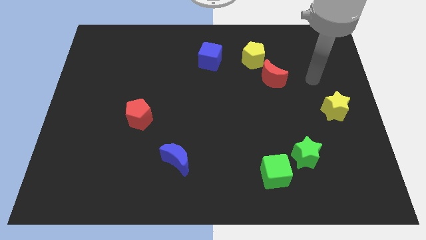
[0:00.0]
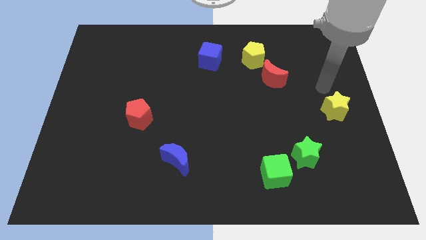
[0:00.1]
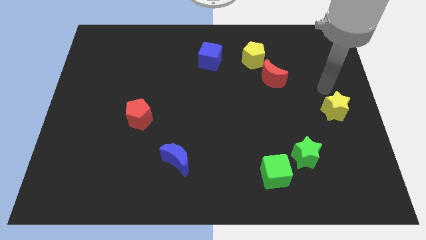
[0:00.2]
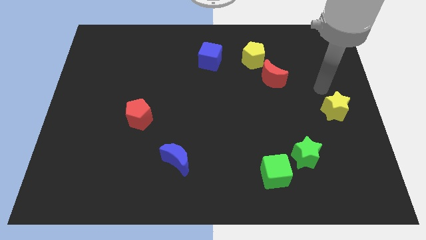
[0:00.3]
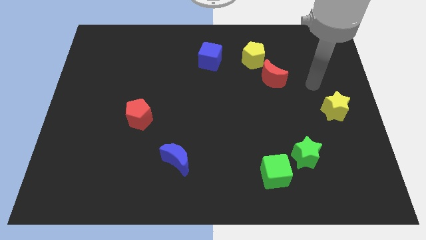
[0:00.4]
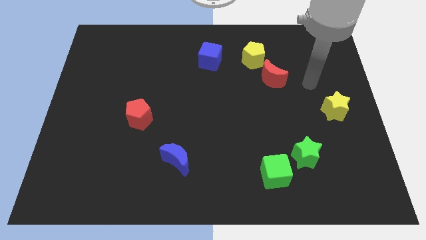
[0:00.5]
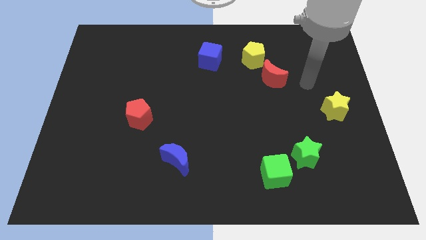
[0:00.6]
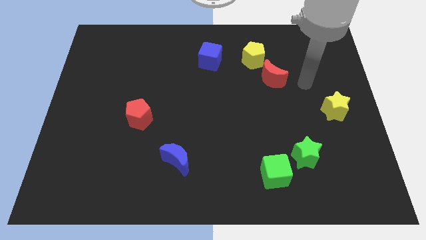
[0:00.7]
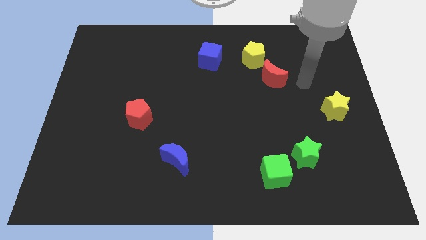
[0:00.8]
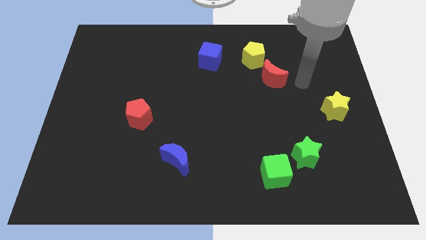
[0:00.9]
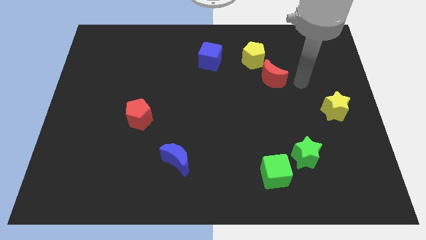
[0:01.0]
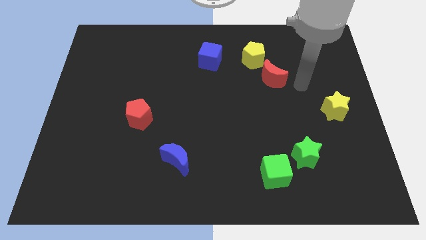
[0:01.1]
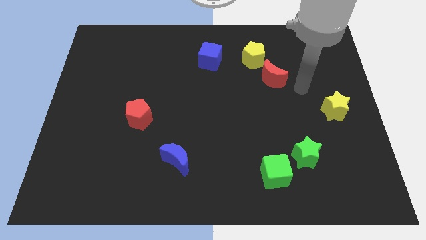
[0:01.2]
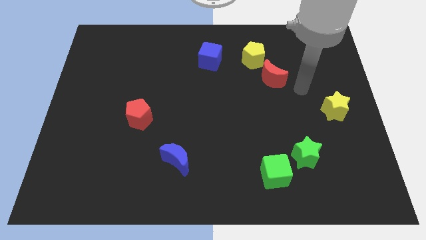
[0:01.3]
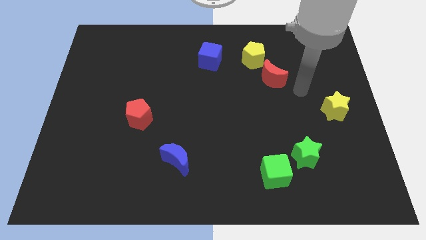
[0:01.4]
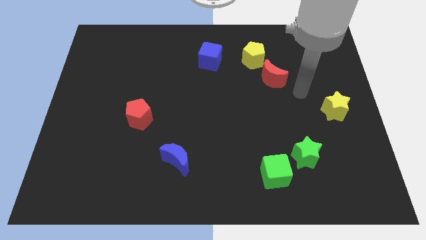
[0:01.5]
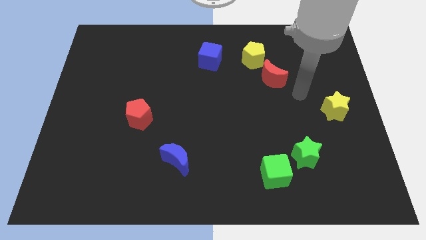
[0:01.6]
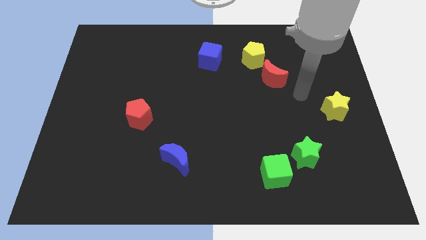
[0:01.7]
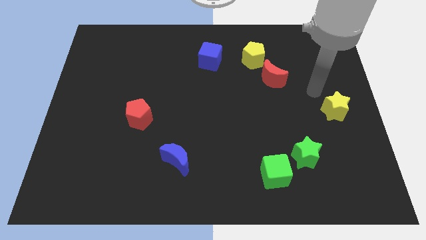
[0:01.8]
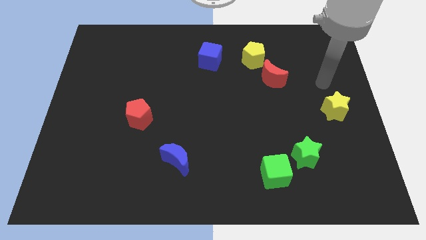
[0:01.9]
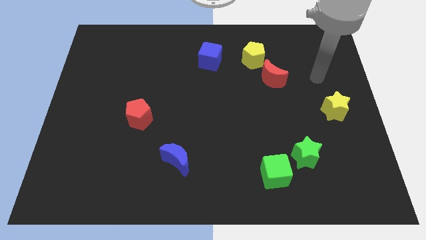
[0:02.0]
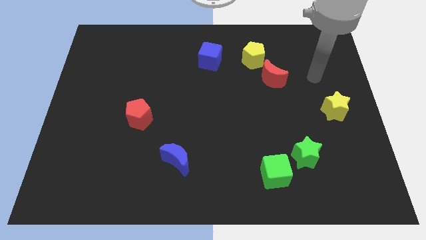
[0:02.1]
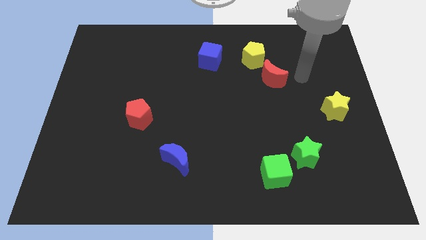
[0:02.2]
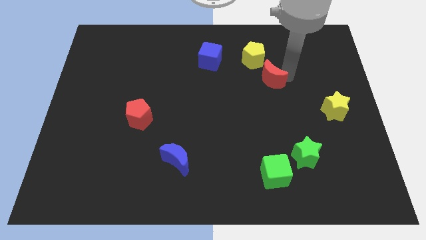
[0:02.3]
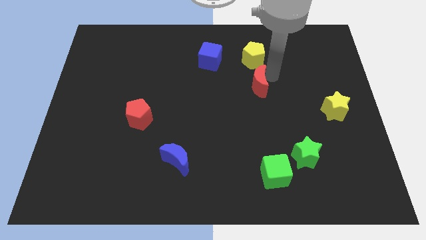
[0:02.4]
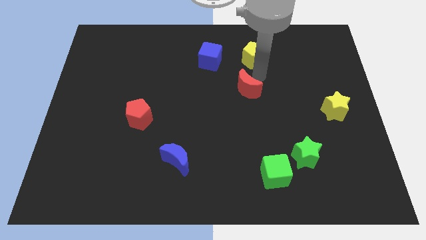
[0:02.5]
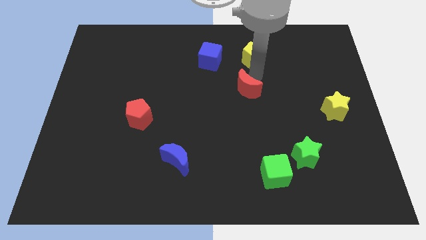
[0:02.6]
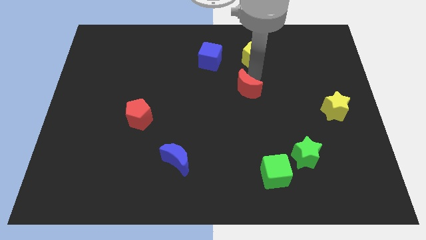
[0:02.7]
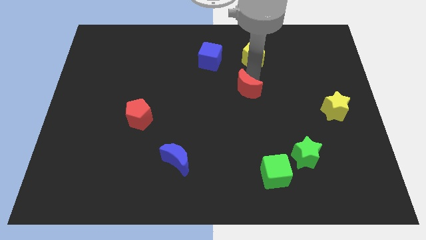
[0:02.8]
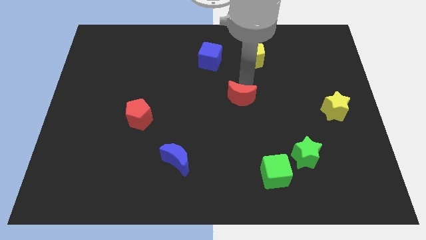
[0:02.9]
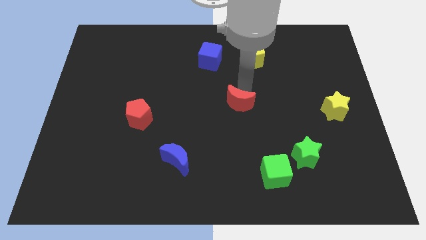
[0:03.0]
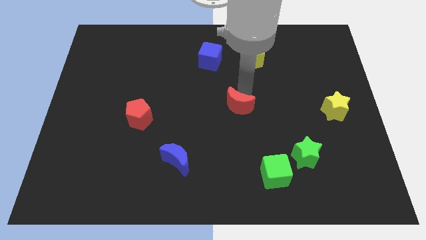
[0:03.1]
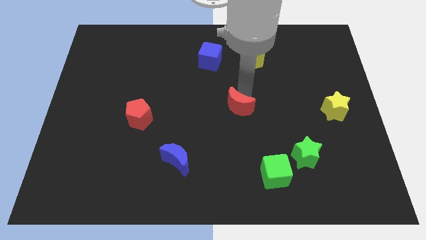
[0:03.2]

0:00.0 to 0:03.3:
move the red moon away from the yellow pentagon

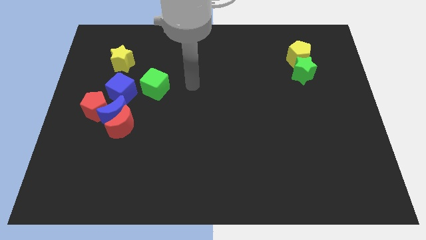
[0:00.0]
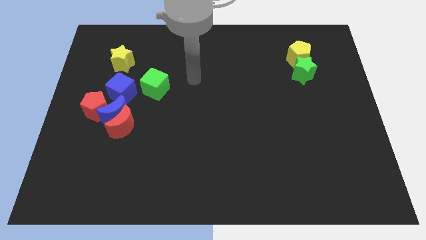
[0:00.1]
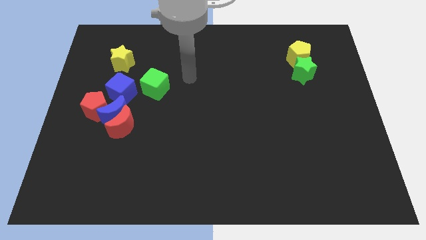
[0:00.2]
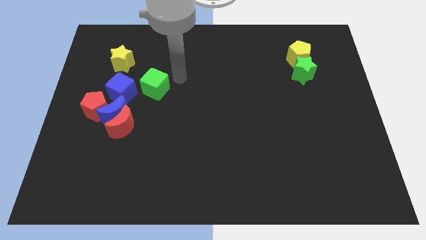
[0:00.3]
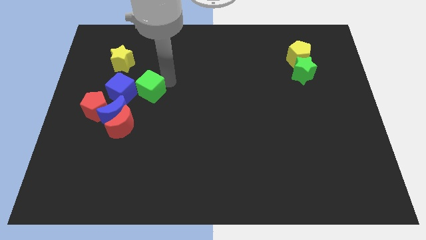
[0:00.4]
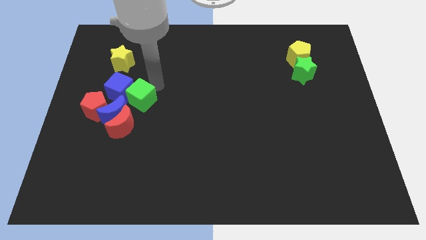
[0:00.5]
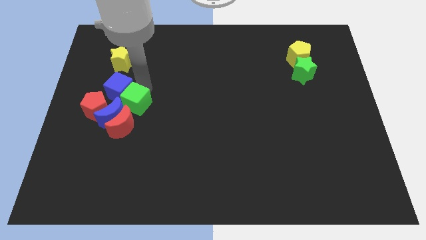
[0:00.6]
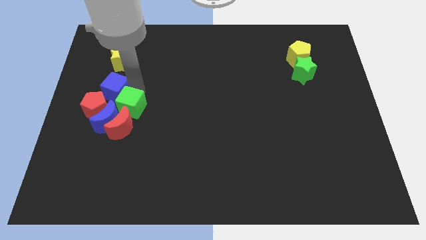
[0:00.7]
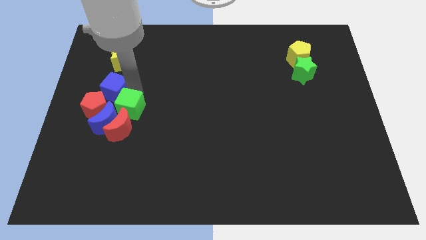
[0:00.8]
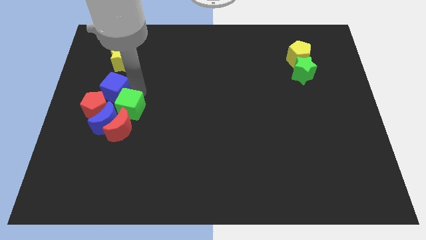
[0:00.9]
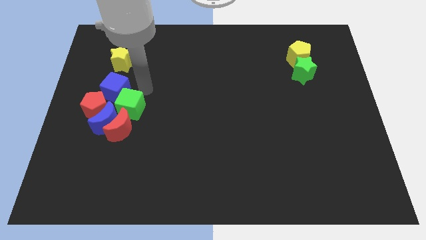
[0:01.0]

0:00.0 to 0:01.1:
push the green cube into the blue crescent

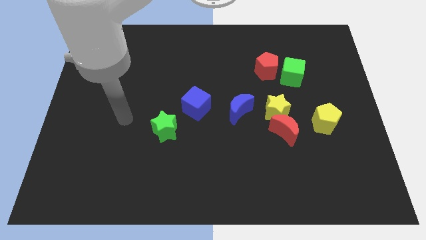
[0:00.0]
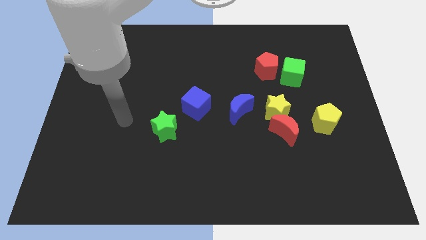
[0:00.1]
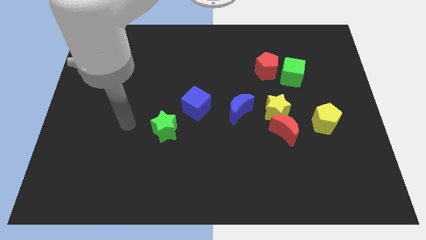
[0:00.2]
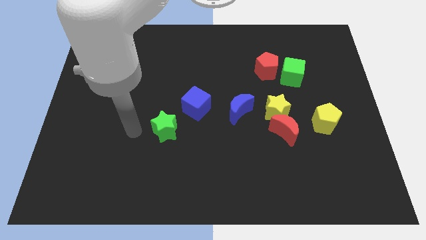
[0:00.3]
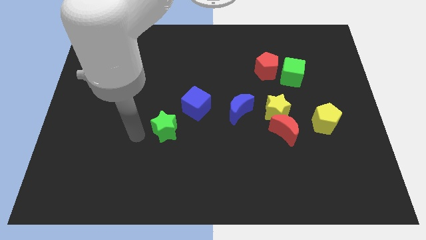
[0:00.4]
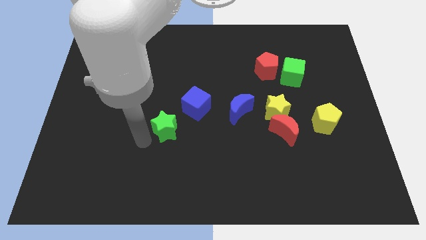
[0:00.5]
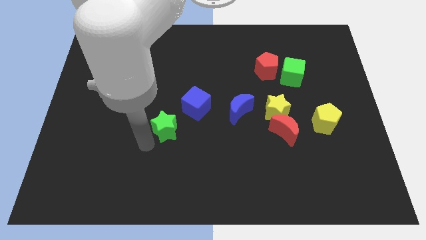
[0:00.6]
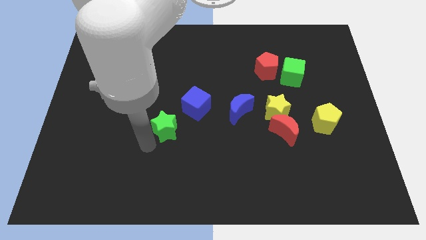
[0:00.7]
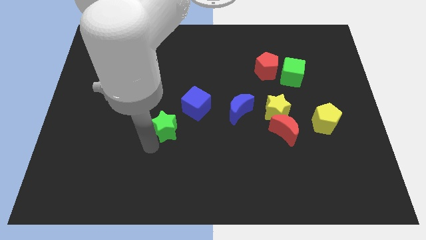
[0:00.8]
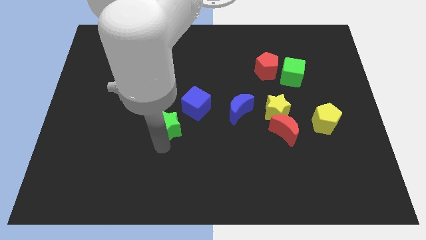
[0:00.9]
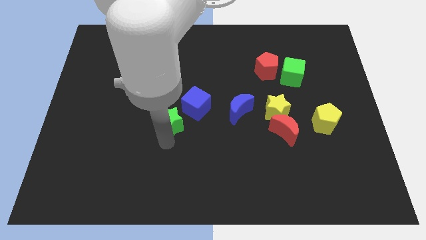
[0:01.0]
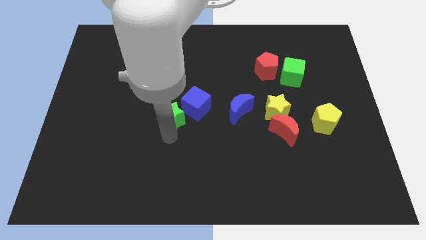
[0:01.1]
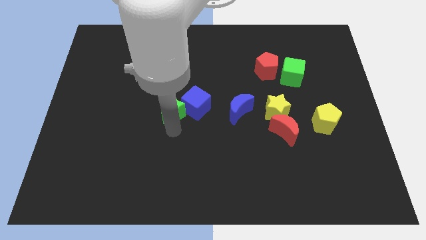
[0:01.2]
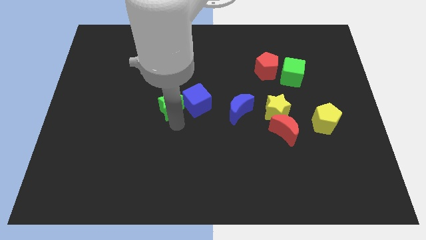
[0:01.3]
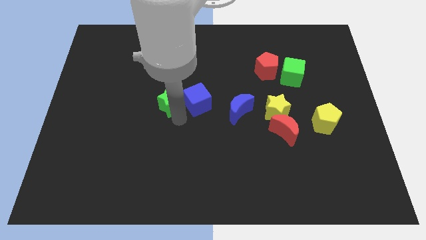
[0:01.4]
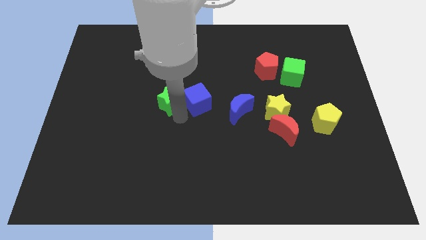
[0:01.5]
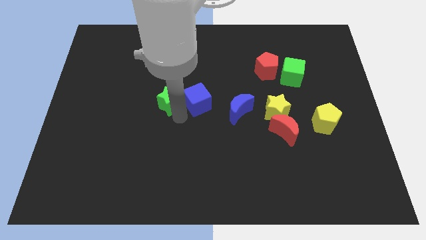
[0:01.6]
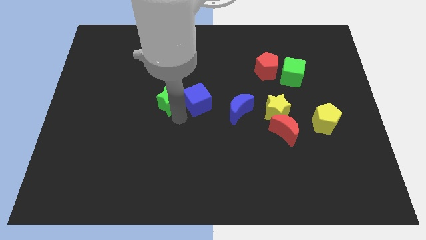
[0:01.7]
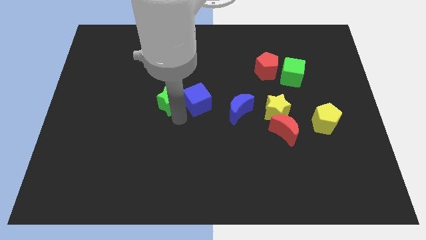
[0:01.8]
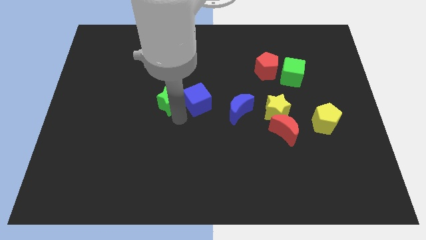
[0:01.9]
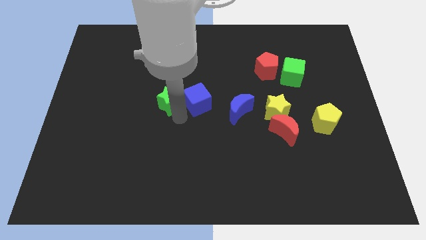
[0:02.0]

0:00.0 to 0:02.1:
slightly push the green star to the left of the blue cube

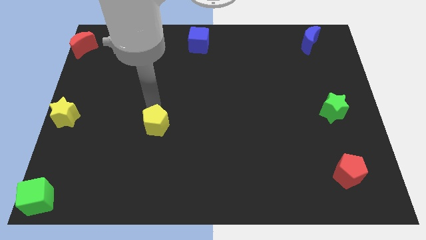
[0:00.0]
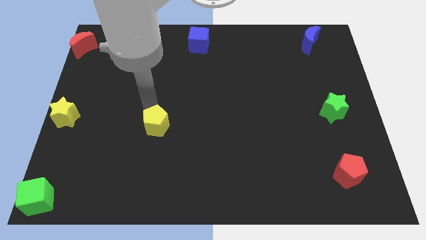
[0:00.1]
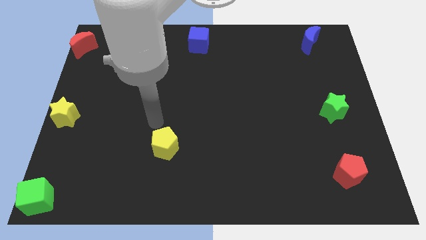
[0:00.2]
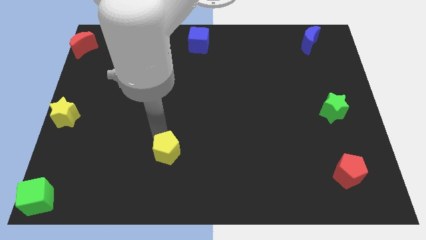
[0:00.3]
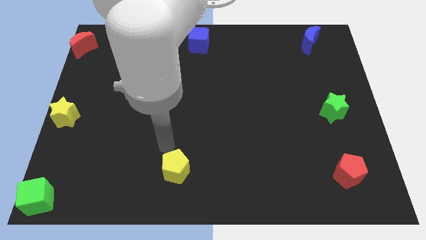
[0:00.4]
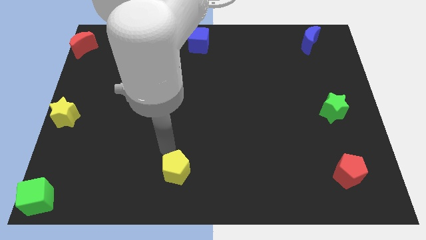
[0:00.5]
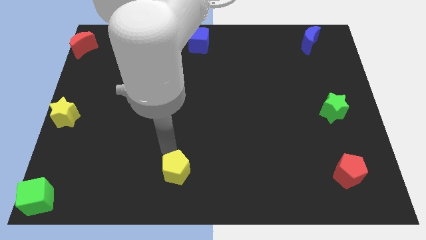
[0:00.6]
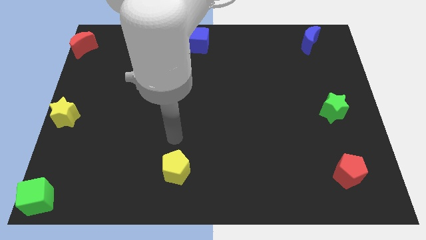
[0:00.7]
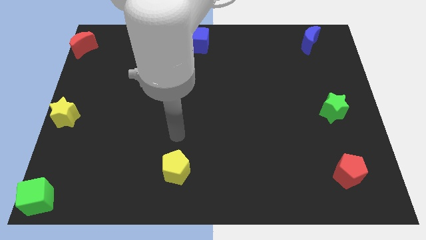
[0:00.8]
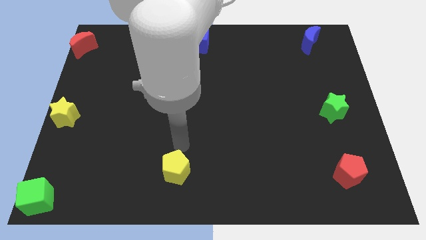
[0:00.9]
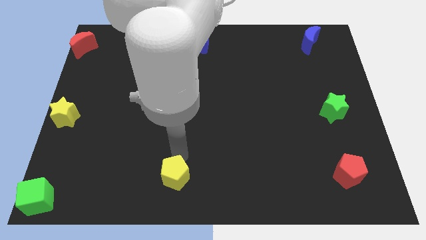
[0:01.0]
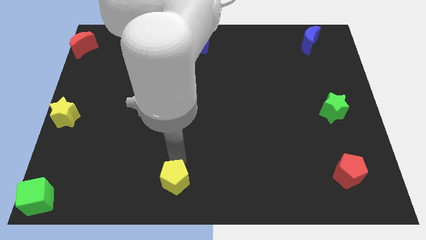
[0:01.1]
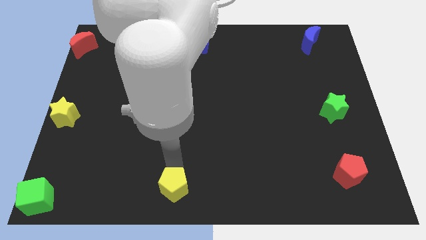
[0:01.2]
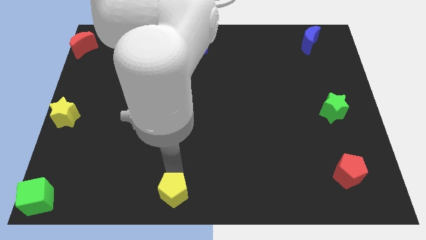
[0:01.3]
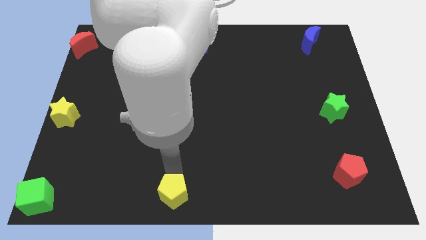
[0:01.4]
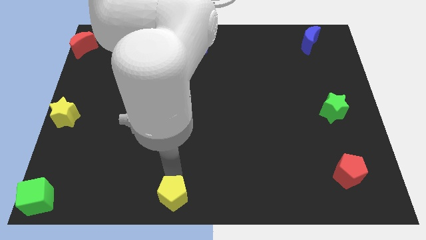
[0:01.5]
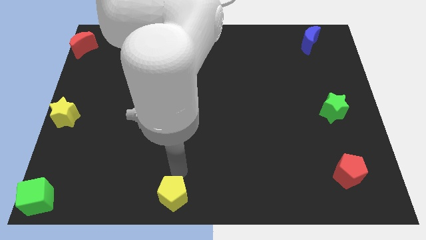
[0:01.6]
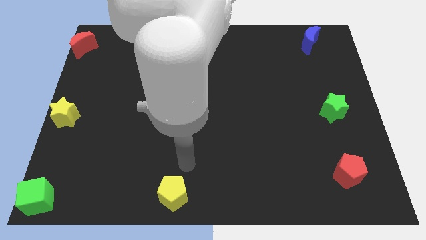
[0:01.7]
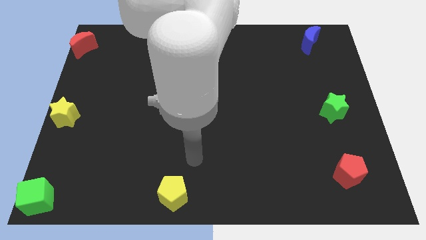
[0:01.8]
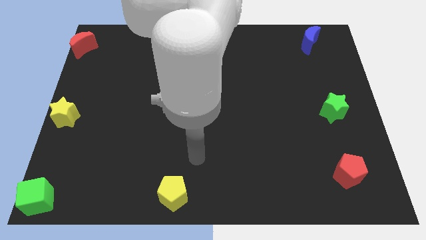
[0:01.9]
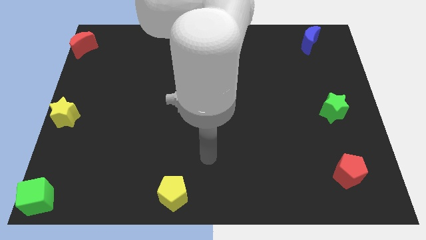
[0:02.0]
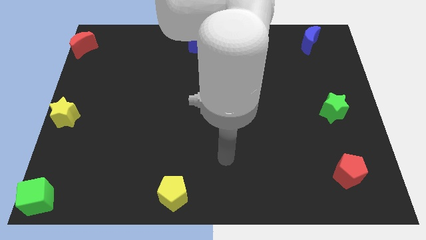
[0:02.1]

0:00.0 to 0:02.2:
move the yellow pentagon to the bottom center of board

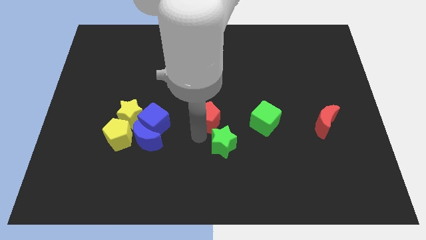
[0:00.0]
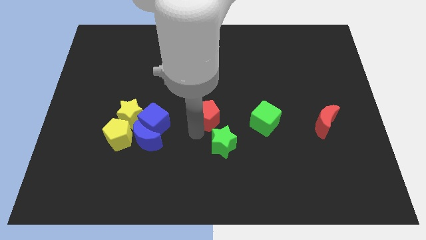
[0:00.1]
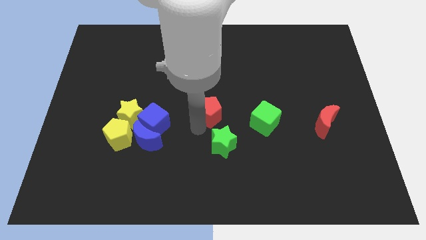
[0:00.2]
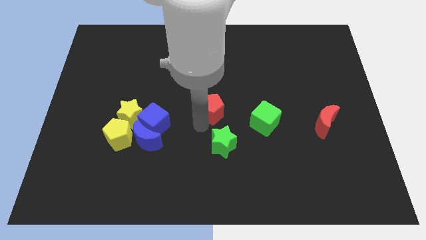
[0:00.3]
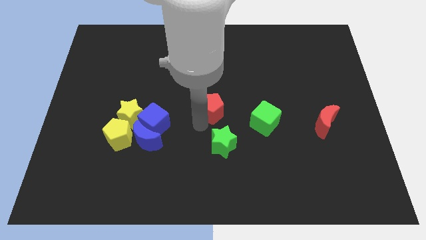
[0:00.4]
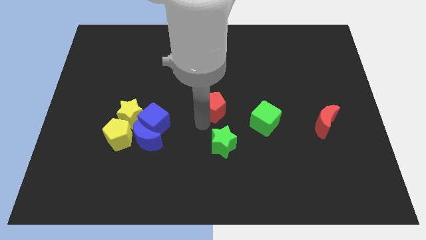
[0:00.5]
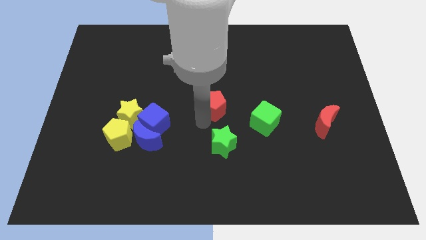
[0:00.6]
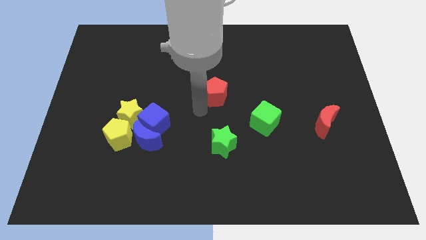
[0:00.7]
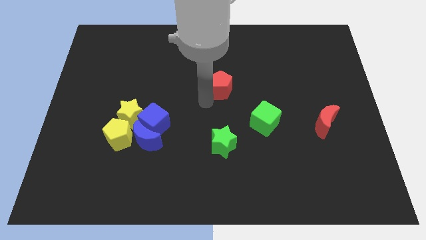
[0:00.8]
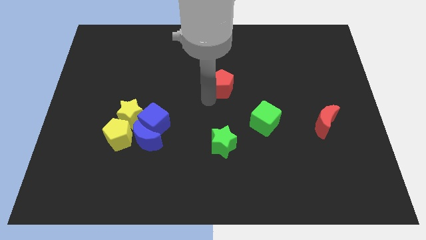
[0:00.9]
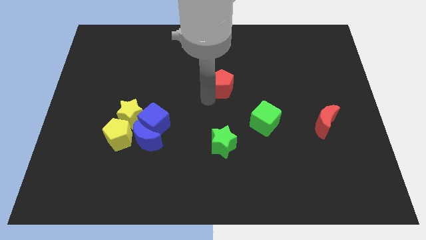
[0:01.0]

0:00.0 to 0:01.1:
move red pentagon to the center of the board
